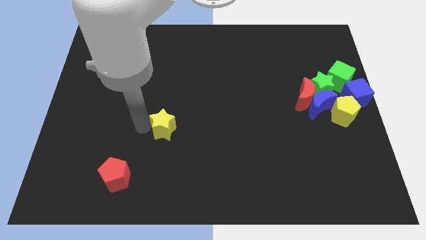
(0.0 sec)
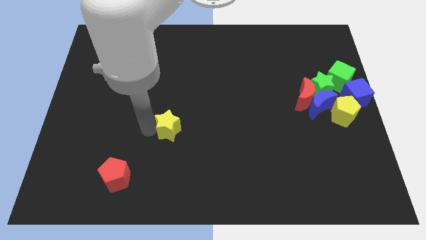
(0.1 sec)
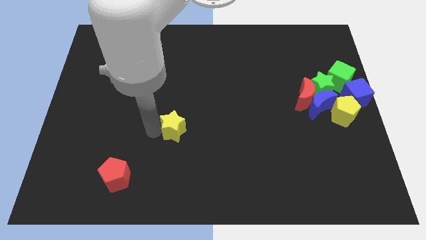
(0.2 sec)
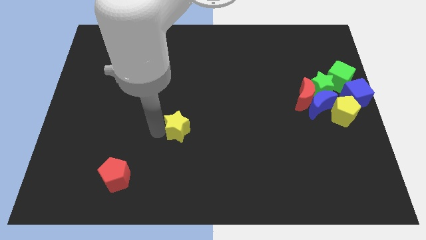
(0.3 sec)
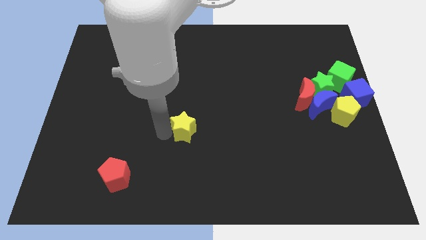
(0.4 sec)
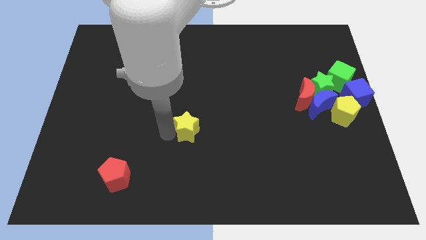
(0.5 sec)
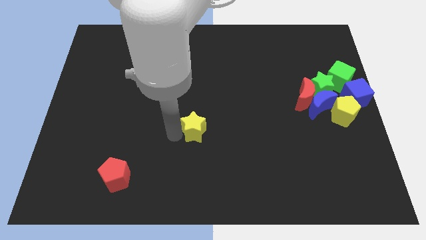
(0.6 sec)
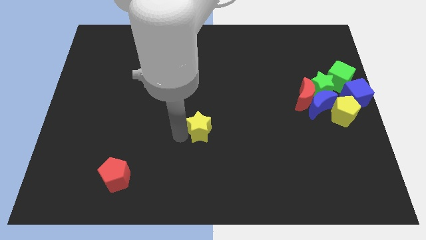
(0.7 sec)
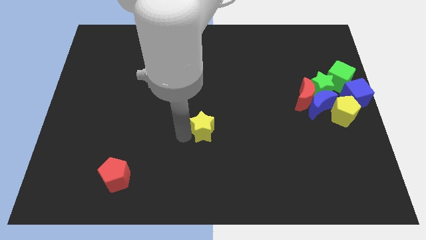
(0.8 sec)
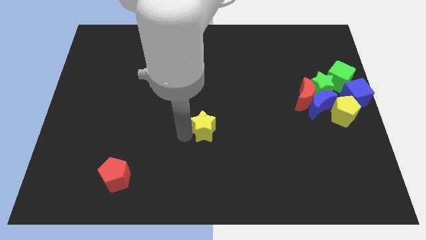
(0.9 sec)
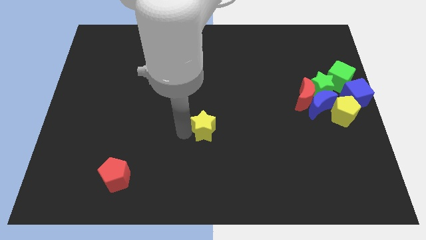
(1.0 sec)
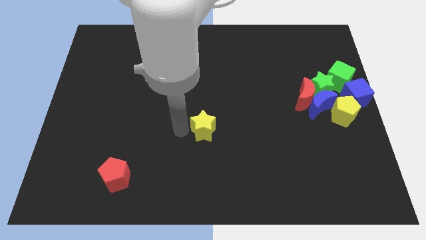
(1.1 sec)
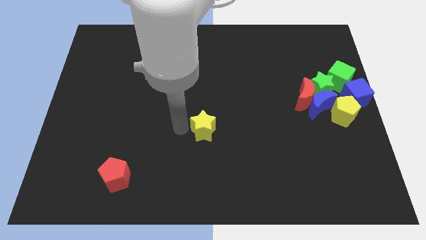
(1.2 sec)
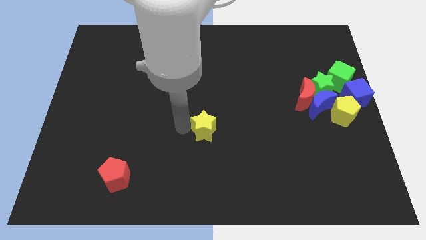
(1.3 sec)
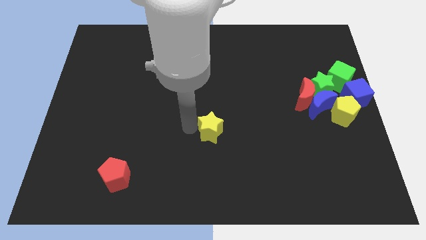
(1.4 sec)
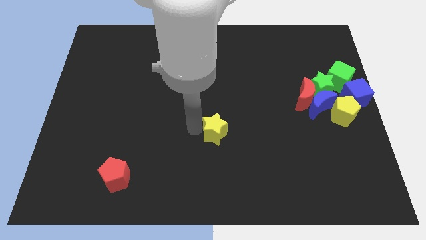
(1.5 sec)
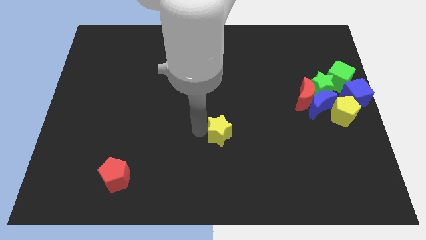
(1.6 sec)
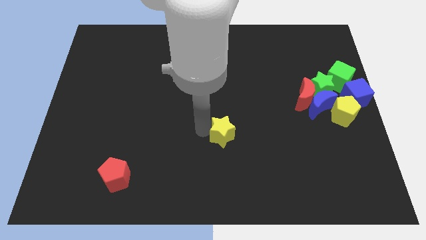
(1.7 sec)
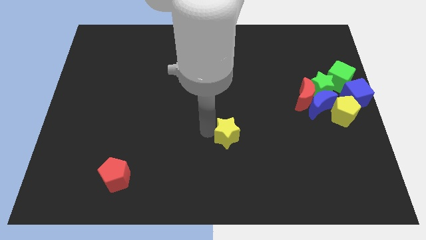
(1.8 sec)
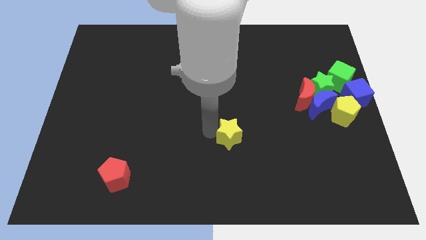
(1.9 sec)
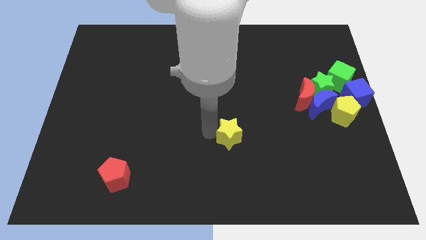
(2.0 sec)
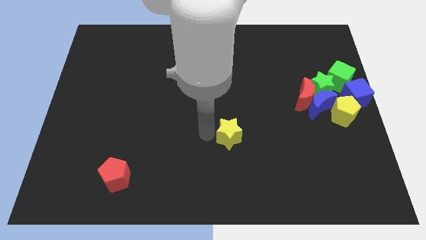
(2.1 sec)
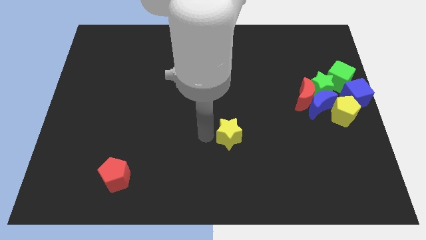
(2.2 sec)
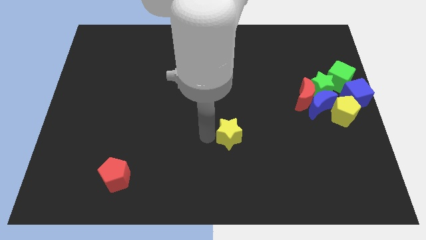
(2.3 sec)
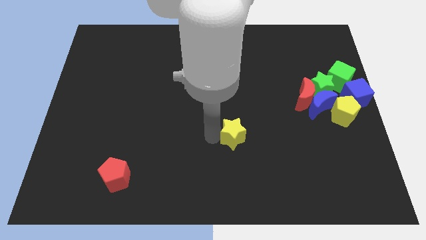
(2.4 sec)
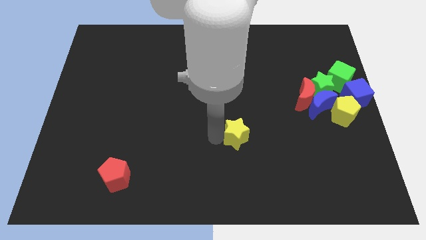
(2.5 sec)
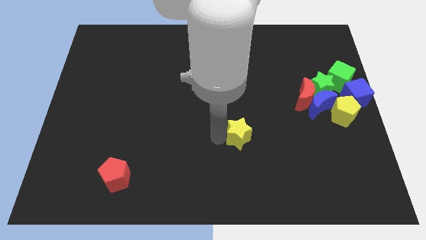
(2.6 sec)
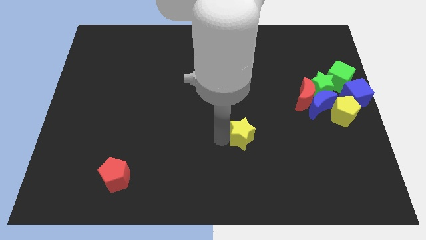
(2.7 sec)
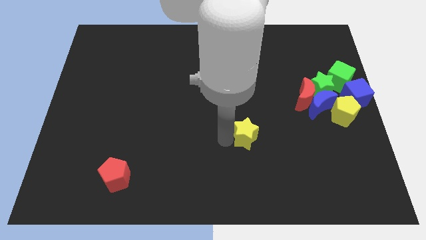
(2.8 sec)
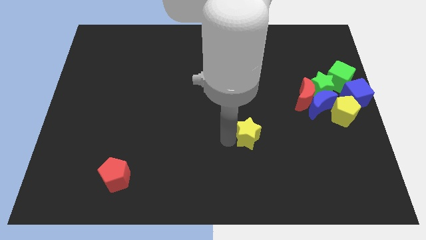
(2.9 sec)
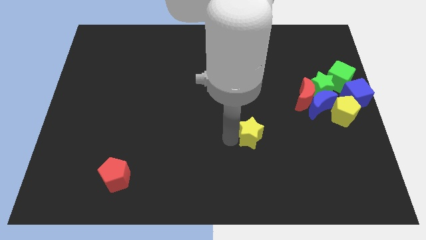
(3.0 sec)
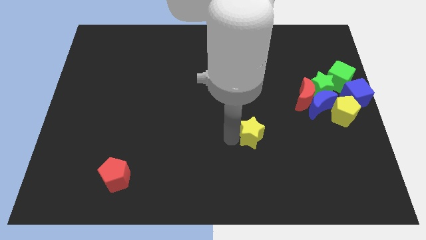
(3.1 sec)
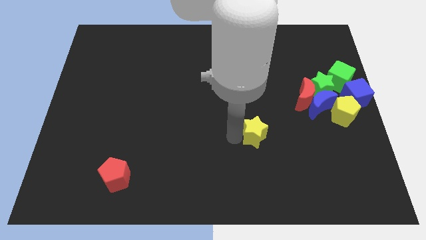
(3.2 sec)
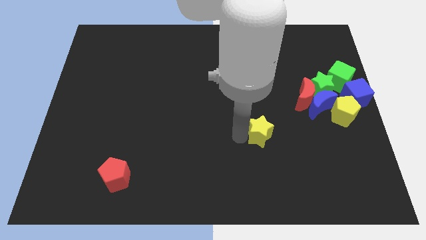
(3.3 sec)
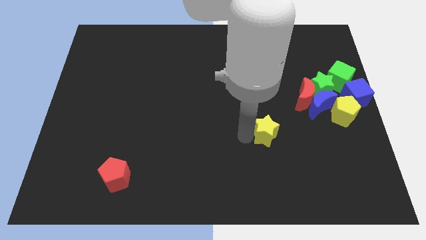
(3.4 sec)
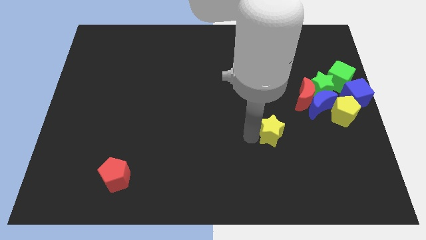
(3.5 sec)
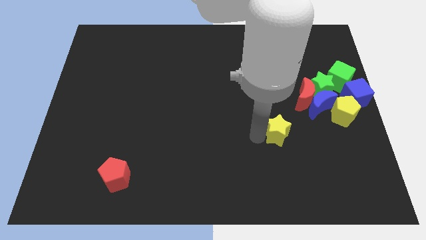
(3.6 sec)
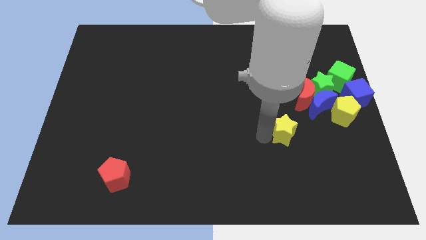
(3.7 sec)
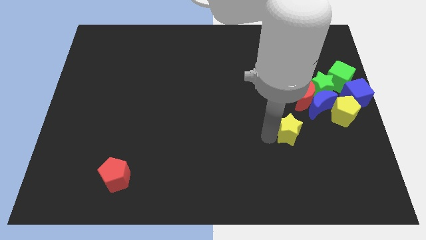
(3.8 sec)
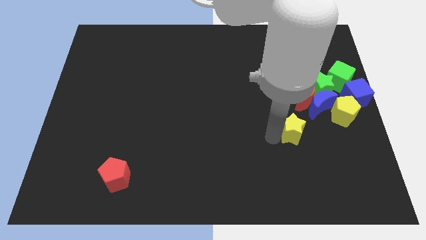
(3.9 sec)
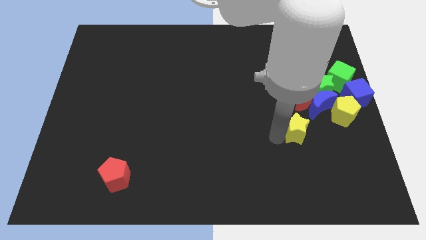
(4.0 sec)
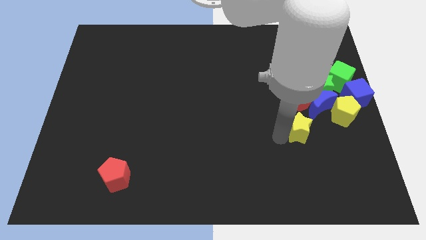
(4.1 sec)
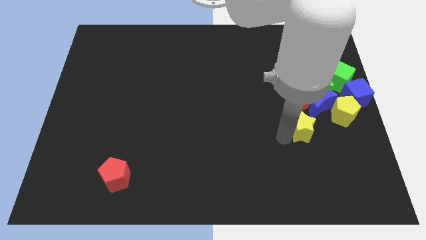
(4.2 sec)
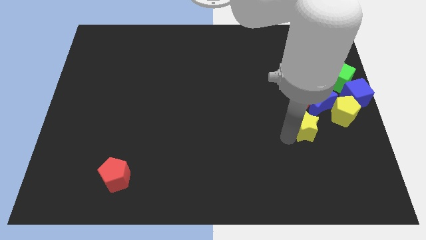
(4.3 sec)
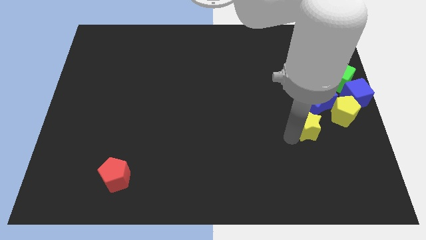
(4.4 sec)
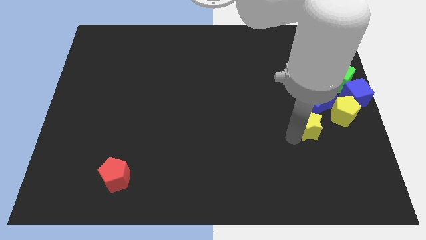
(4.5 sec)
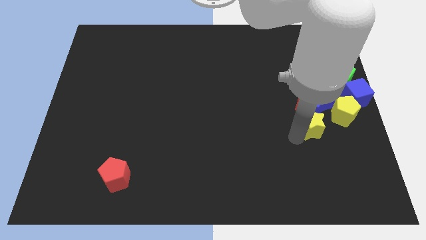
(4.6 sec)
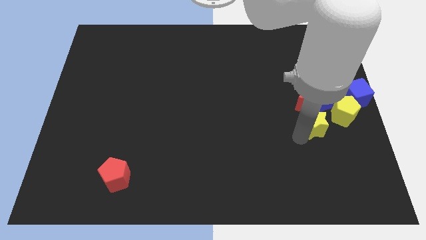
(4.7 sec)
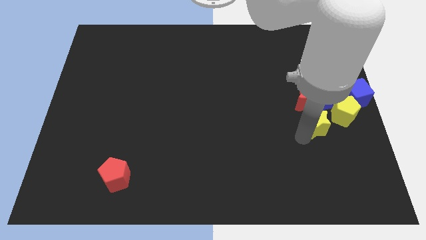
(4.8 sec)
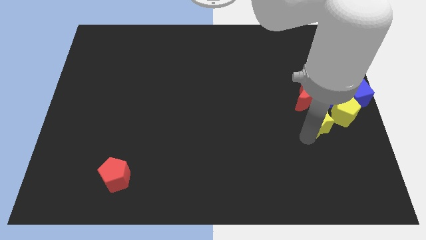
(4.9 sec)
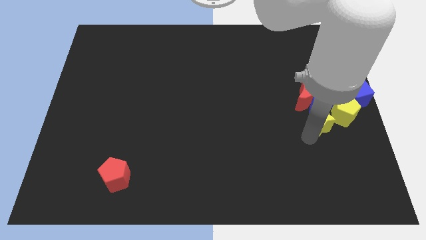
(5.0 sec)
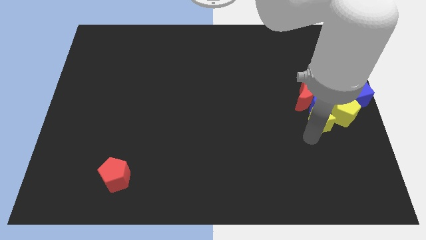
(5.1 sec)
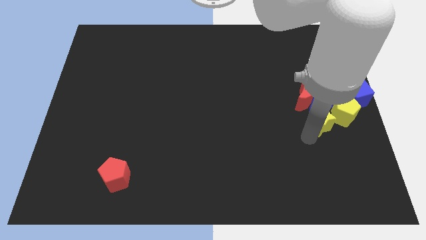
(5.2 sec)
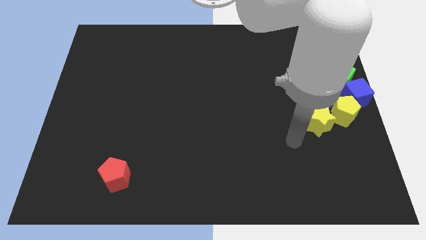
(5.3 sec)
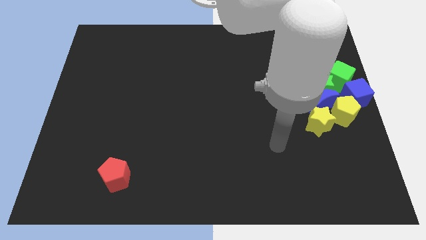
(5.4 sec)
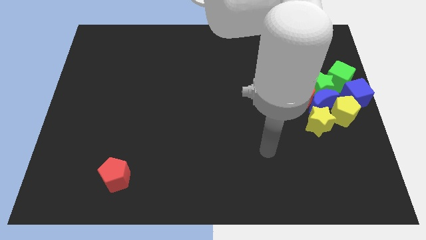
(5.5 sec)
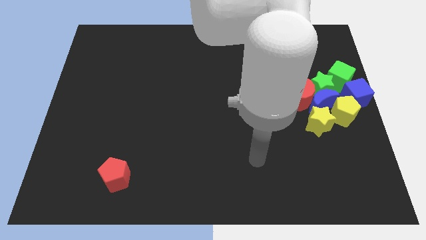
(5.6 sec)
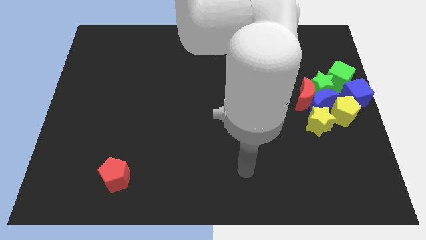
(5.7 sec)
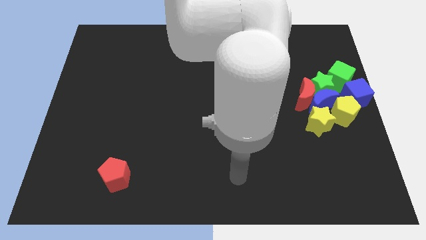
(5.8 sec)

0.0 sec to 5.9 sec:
push the yellow star into the group of blocks

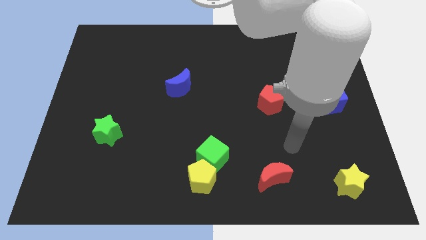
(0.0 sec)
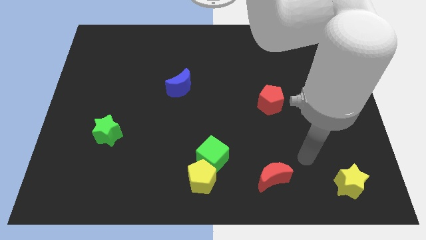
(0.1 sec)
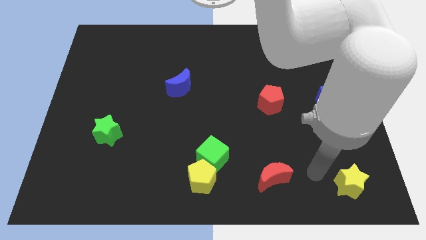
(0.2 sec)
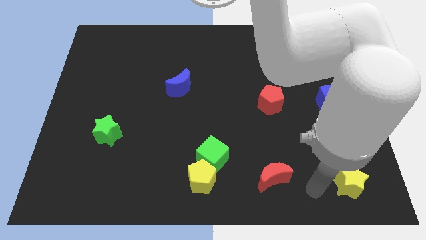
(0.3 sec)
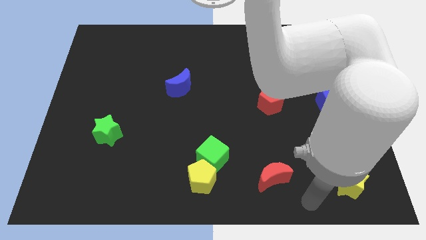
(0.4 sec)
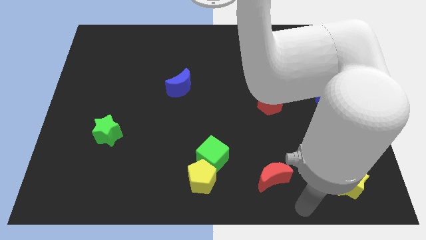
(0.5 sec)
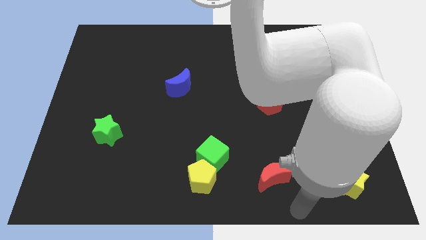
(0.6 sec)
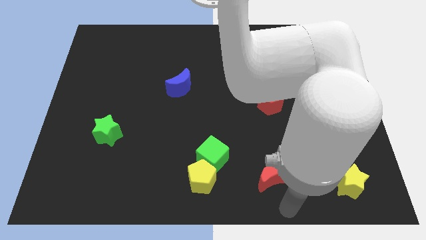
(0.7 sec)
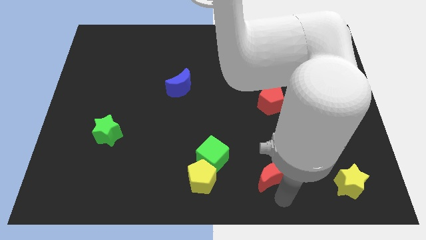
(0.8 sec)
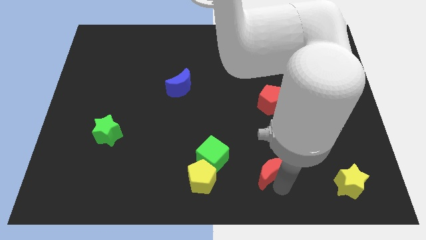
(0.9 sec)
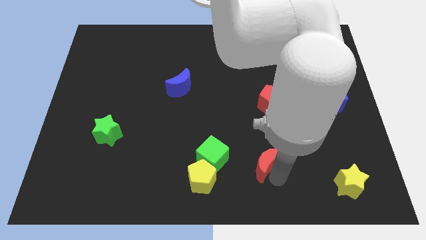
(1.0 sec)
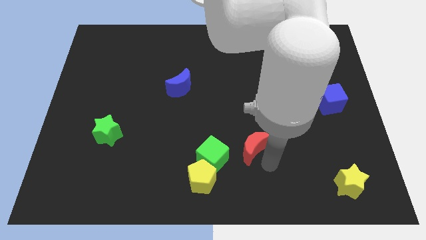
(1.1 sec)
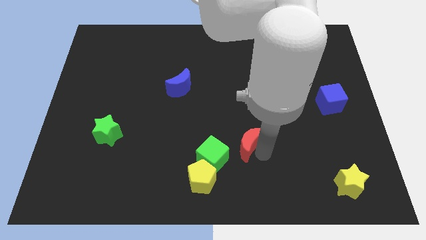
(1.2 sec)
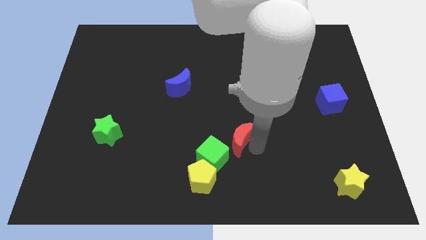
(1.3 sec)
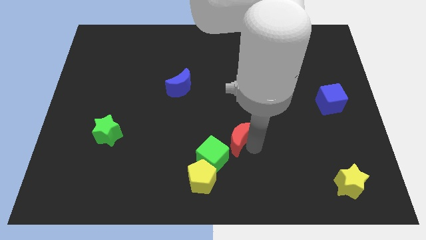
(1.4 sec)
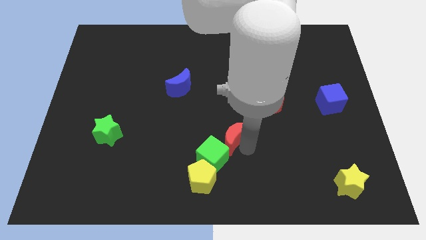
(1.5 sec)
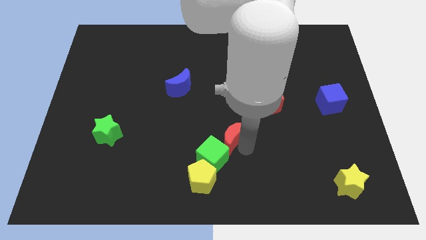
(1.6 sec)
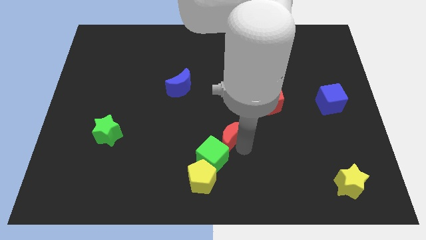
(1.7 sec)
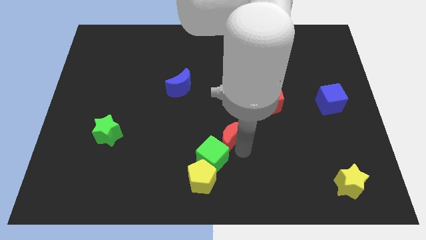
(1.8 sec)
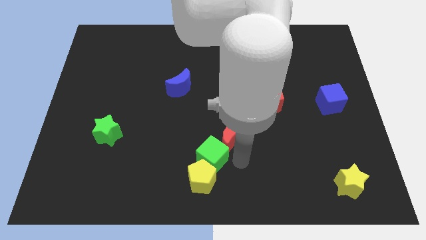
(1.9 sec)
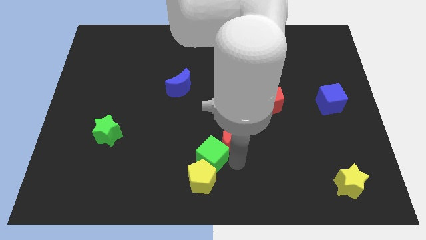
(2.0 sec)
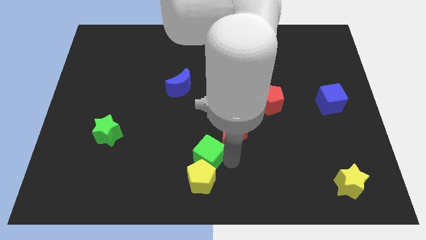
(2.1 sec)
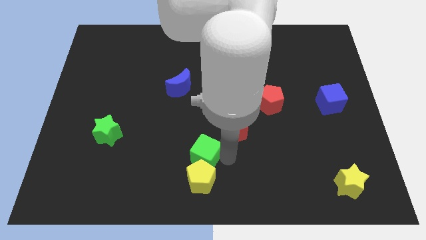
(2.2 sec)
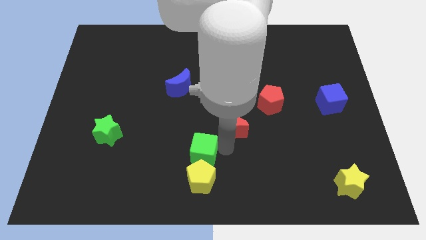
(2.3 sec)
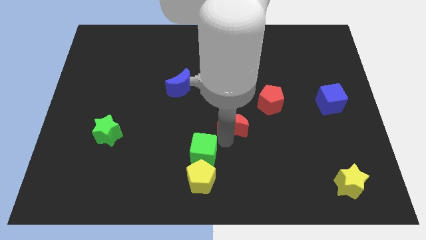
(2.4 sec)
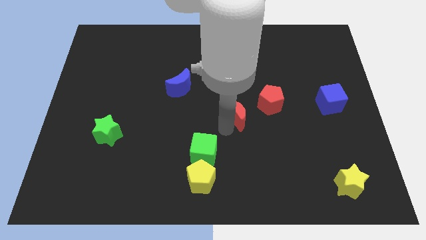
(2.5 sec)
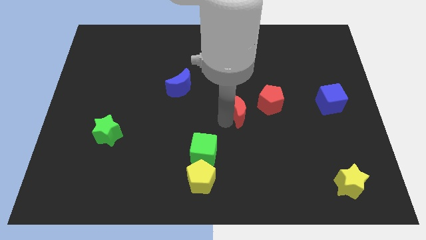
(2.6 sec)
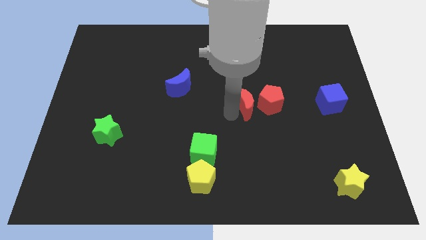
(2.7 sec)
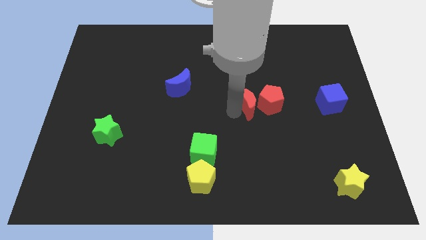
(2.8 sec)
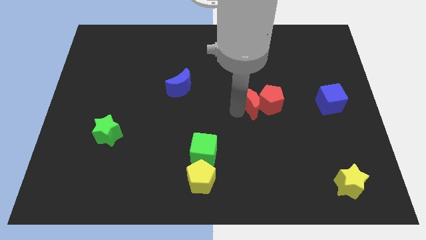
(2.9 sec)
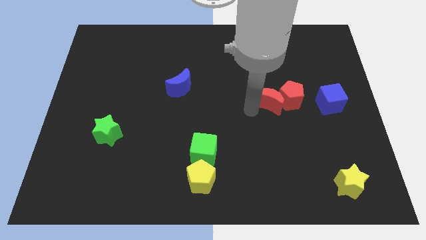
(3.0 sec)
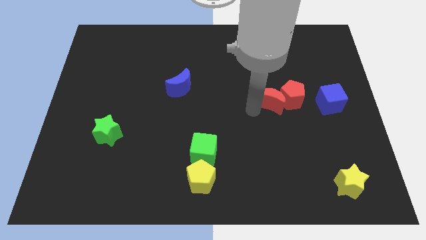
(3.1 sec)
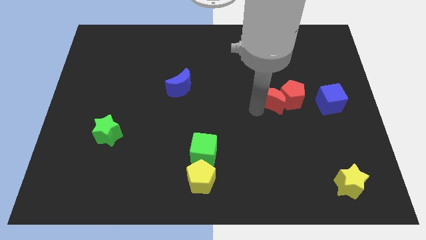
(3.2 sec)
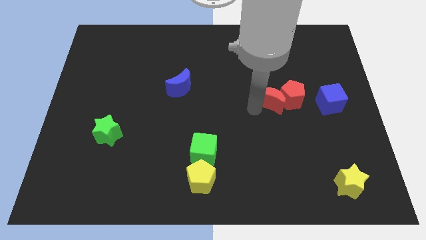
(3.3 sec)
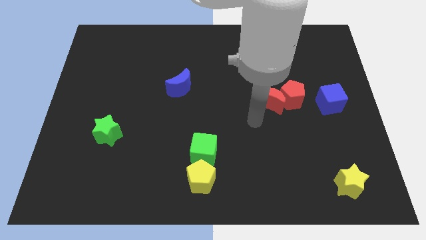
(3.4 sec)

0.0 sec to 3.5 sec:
move the red crescent into the red pentagon
